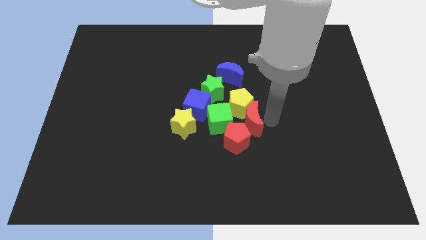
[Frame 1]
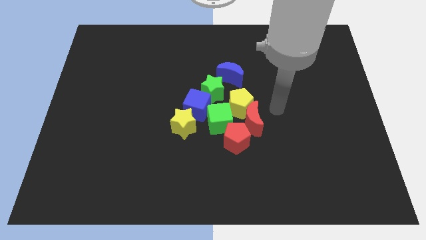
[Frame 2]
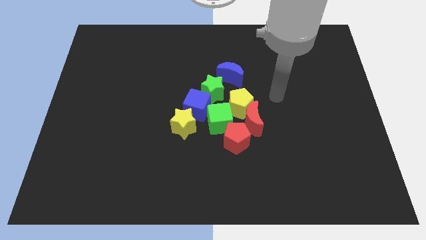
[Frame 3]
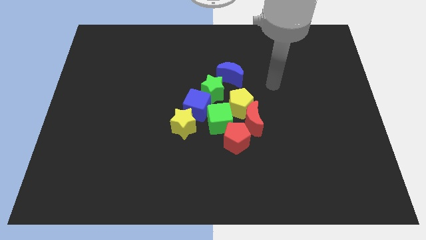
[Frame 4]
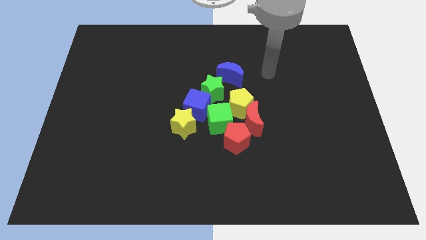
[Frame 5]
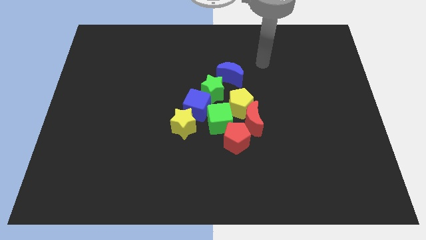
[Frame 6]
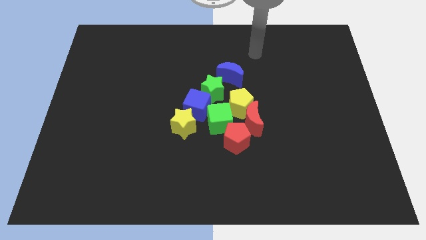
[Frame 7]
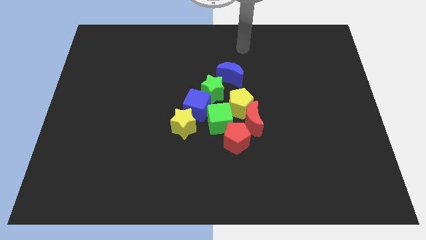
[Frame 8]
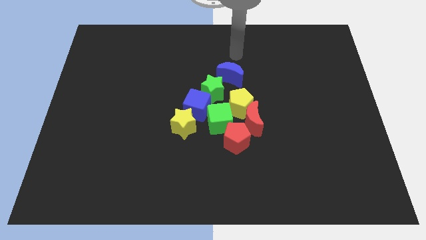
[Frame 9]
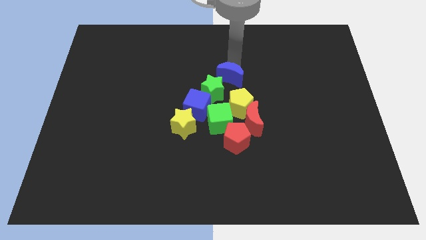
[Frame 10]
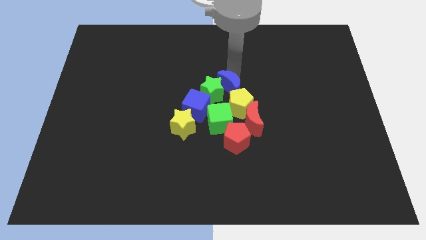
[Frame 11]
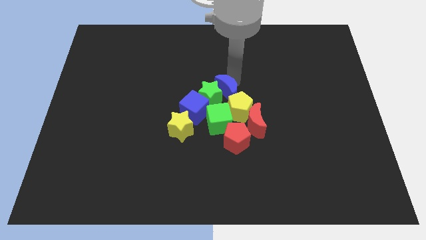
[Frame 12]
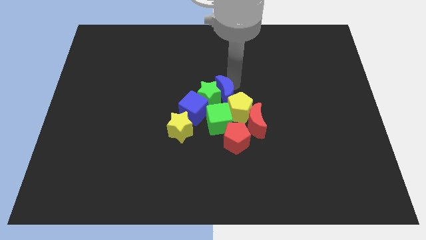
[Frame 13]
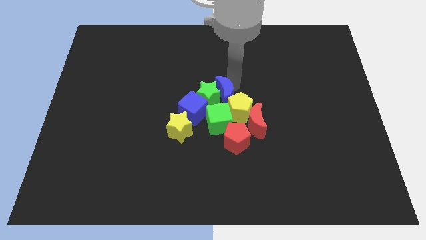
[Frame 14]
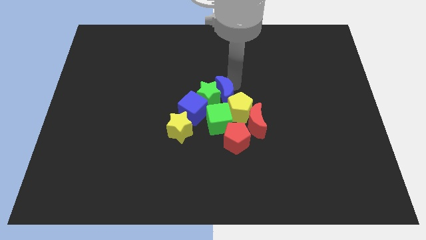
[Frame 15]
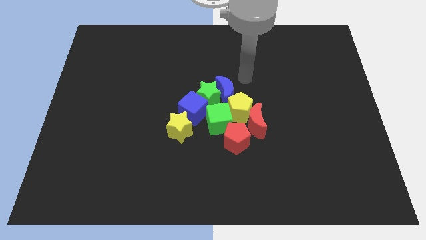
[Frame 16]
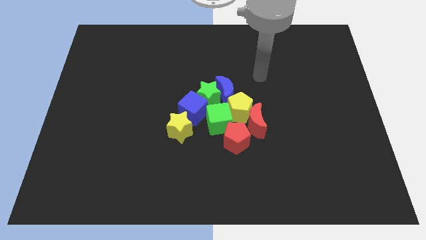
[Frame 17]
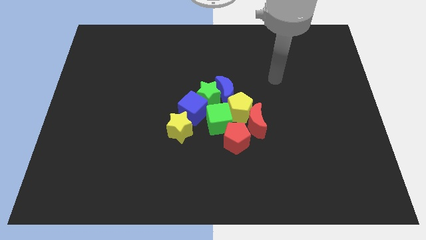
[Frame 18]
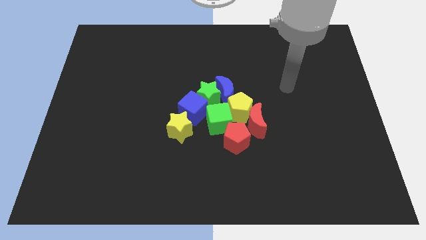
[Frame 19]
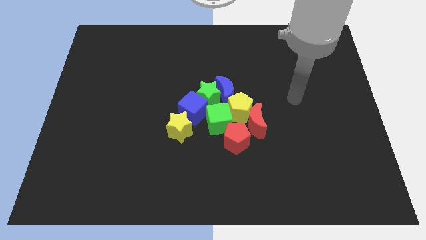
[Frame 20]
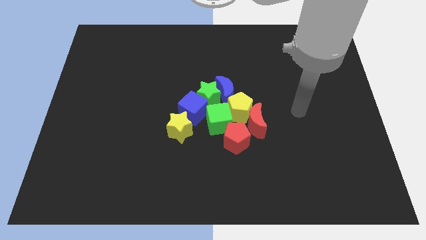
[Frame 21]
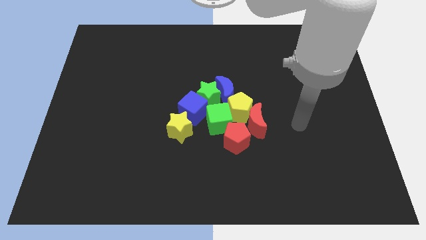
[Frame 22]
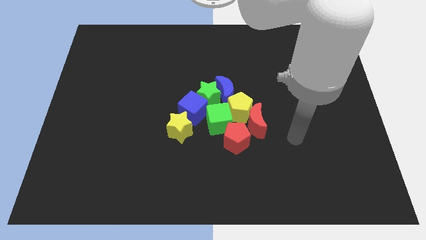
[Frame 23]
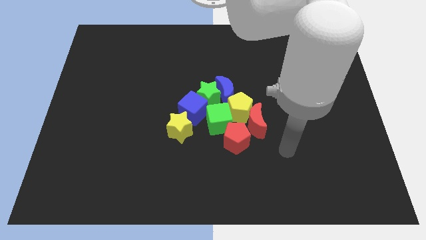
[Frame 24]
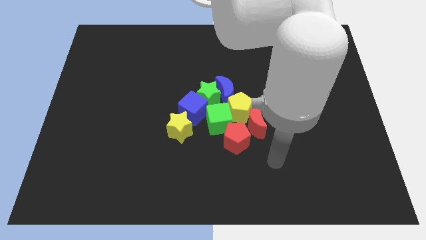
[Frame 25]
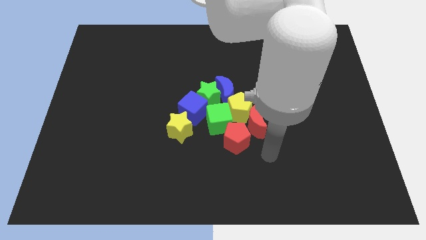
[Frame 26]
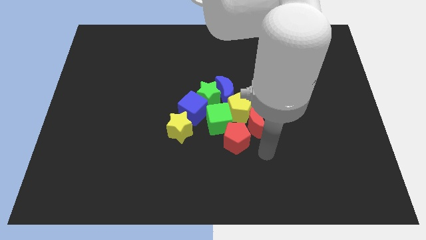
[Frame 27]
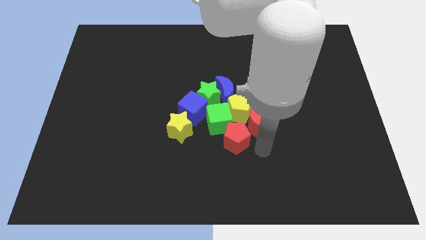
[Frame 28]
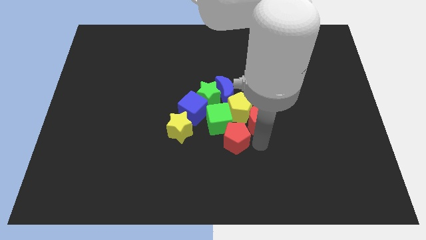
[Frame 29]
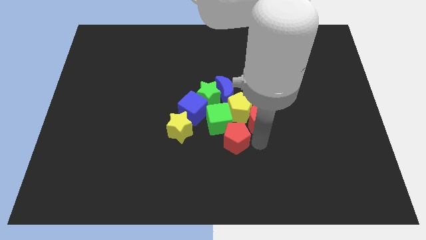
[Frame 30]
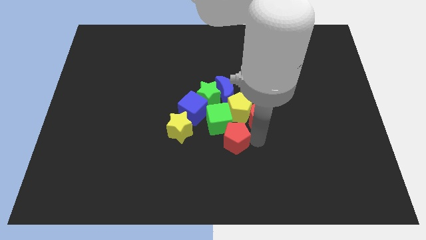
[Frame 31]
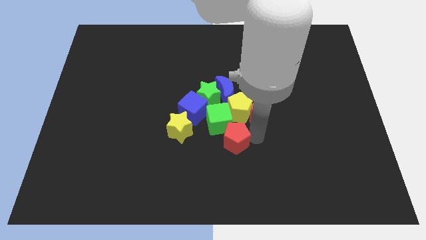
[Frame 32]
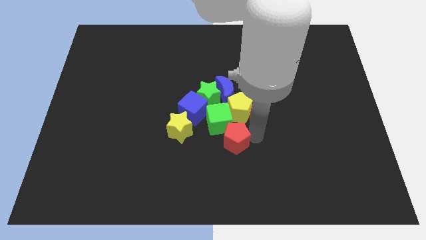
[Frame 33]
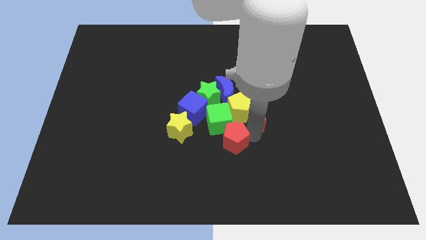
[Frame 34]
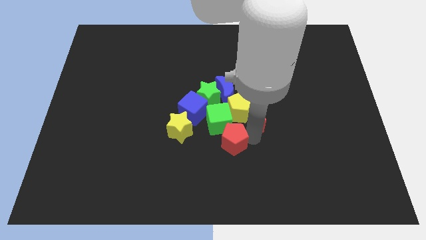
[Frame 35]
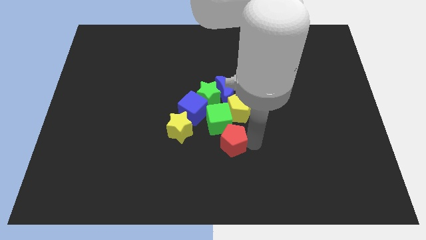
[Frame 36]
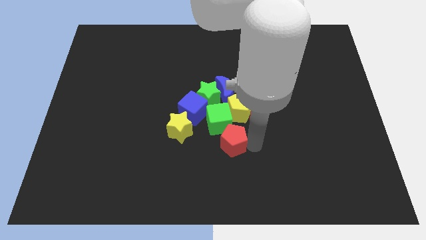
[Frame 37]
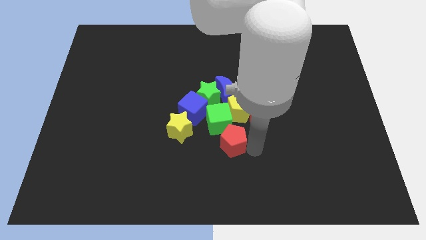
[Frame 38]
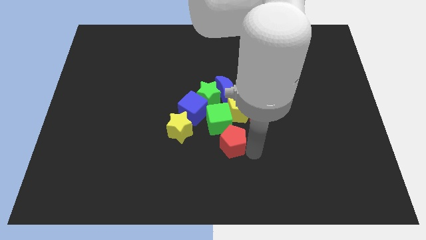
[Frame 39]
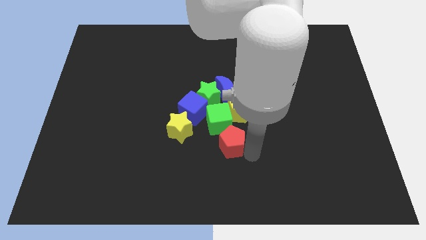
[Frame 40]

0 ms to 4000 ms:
adjust the blocks at the center of the board

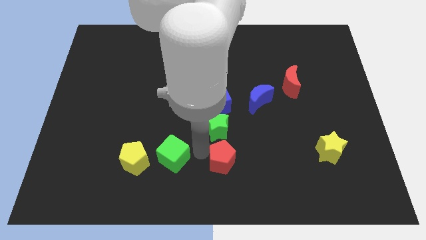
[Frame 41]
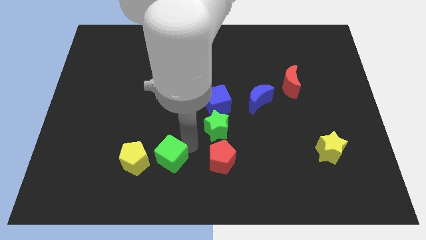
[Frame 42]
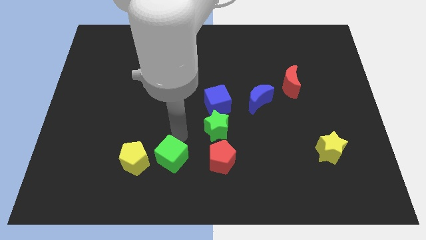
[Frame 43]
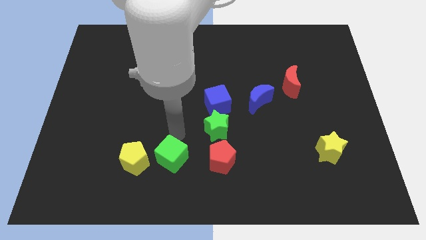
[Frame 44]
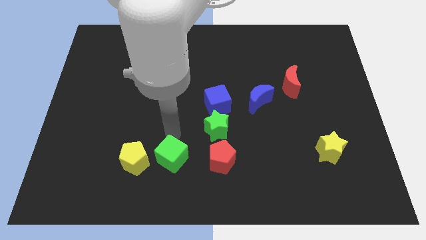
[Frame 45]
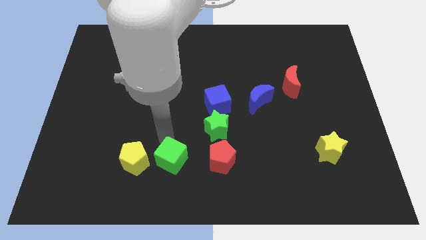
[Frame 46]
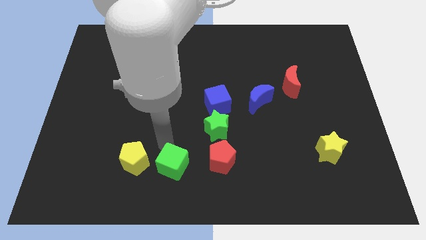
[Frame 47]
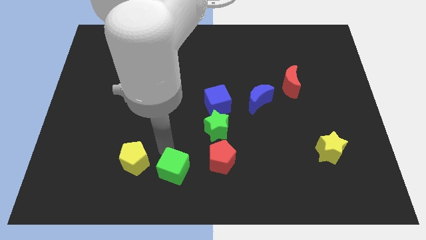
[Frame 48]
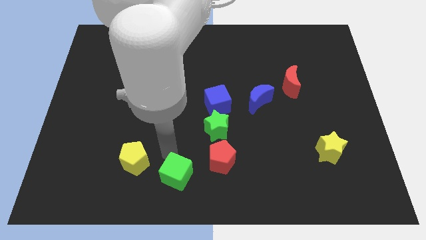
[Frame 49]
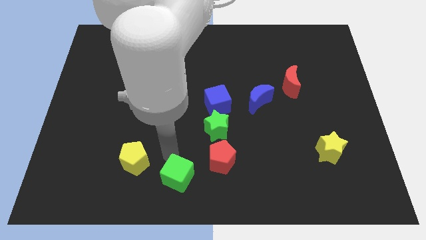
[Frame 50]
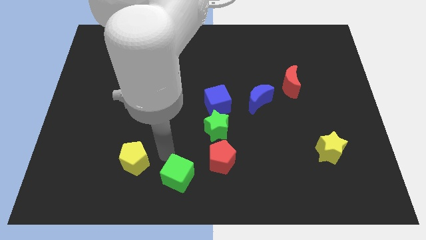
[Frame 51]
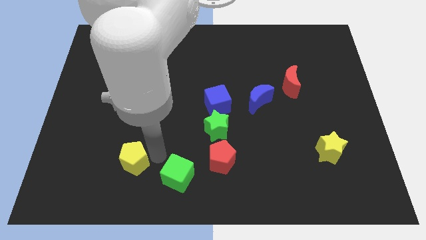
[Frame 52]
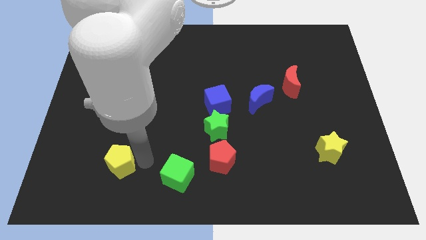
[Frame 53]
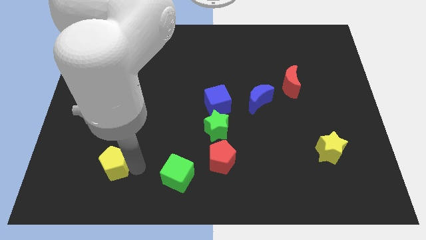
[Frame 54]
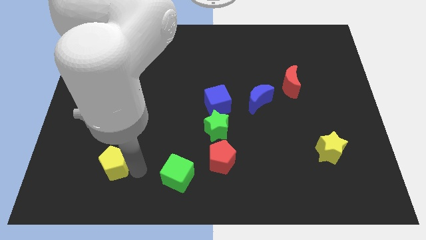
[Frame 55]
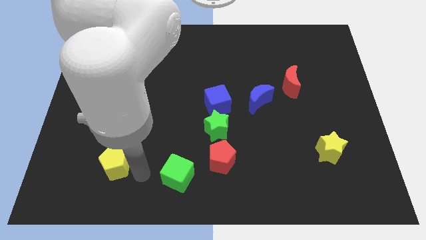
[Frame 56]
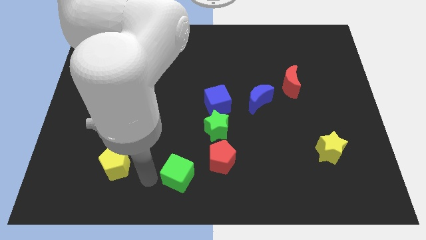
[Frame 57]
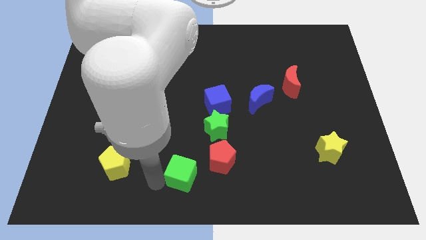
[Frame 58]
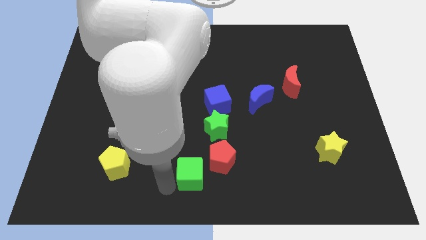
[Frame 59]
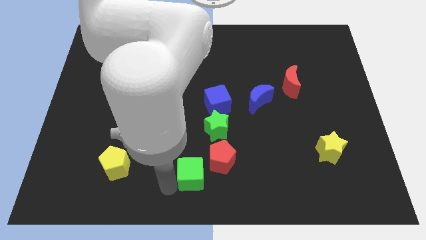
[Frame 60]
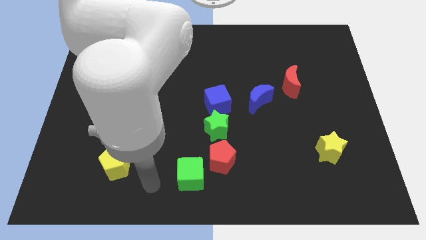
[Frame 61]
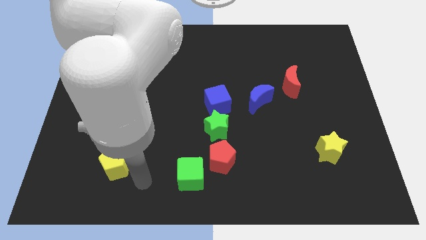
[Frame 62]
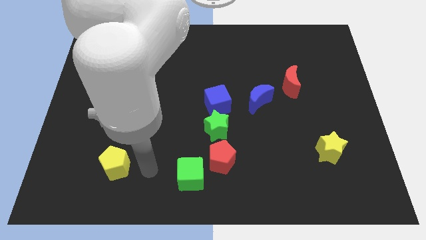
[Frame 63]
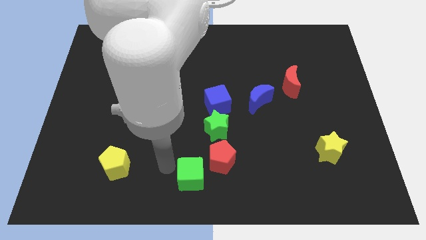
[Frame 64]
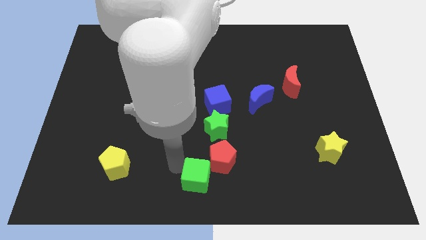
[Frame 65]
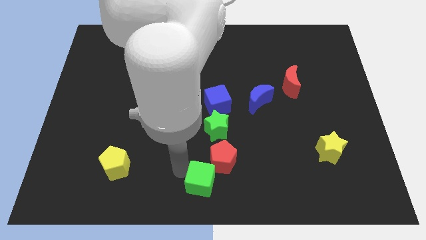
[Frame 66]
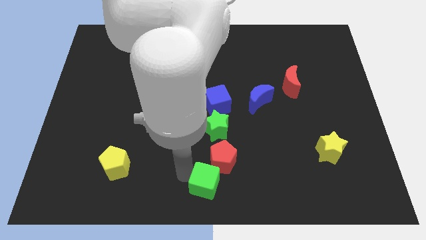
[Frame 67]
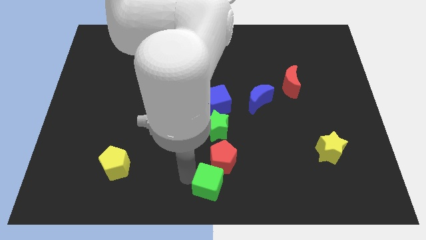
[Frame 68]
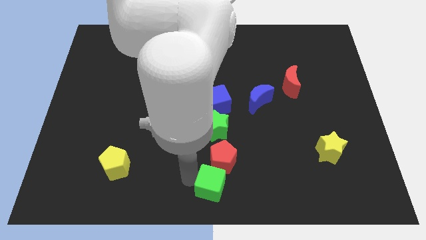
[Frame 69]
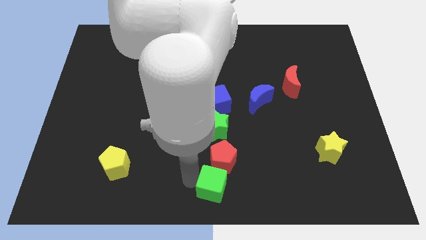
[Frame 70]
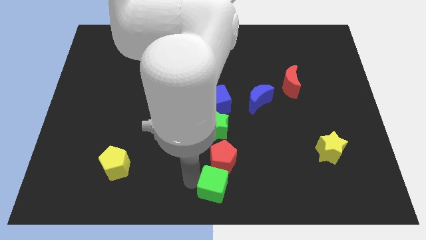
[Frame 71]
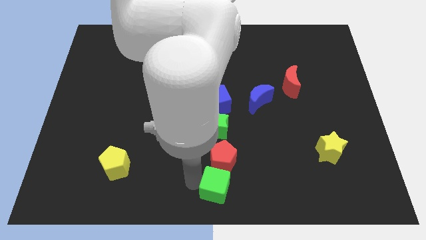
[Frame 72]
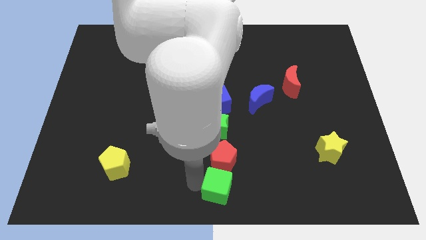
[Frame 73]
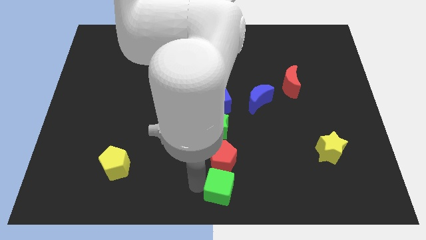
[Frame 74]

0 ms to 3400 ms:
place green cube to the bottom of the red pentagon

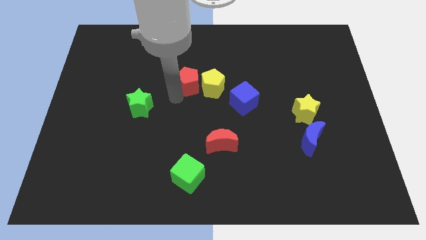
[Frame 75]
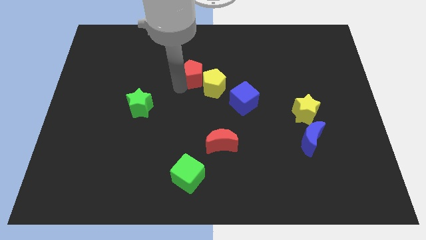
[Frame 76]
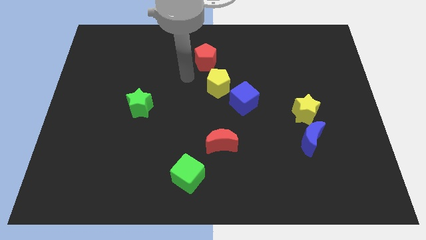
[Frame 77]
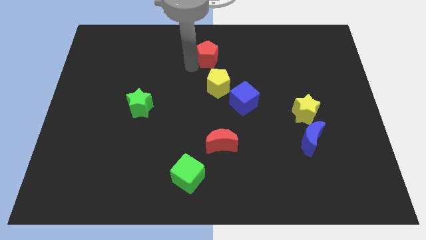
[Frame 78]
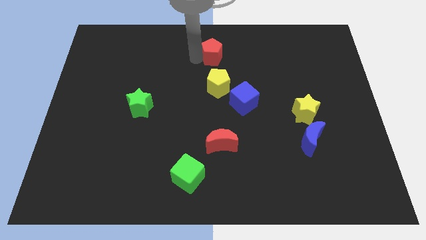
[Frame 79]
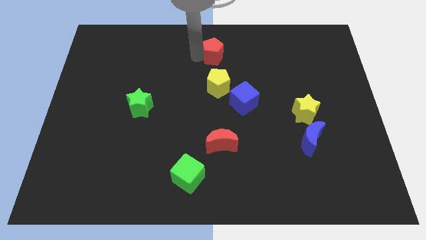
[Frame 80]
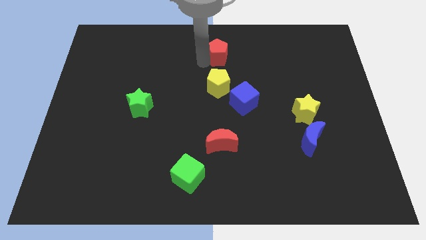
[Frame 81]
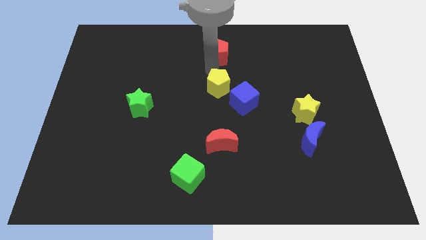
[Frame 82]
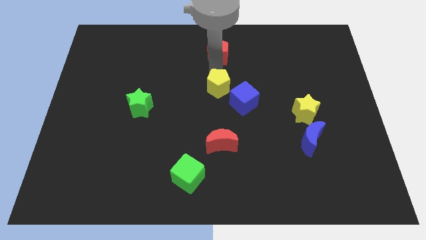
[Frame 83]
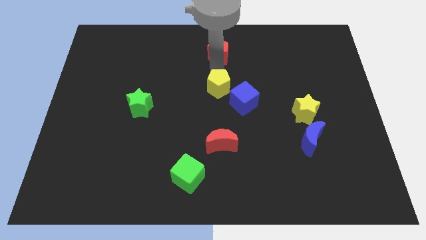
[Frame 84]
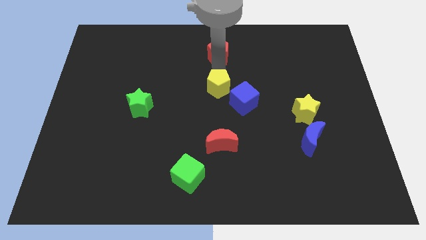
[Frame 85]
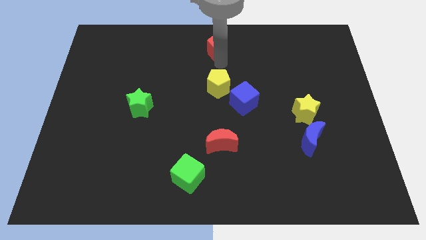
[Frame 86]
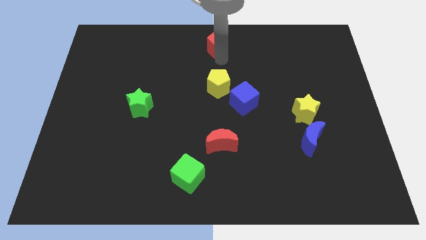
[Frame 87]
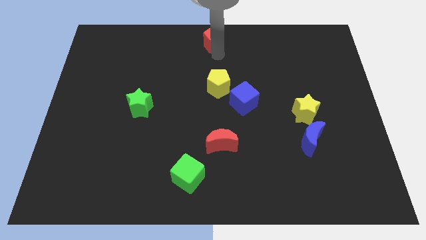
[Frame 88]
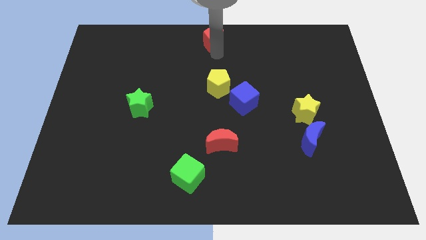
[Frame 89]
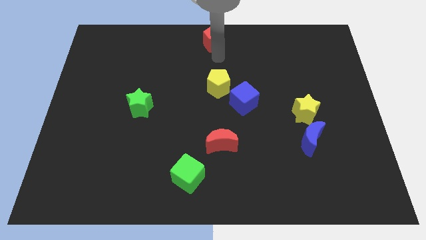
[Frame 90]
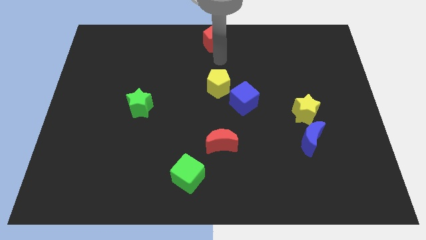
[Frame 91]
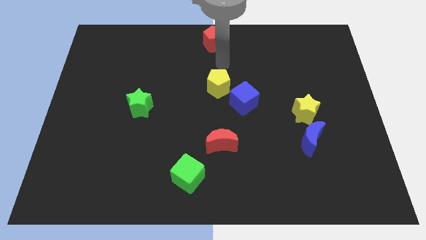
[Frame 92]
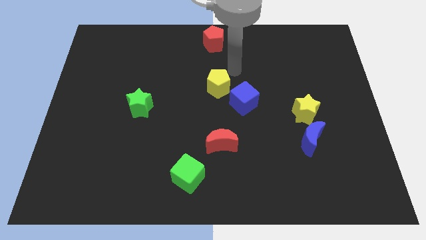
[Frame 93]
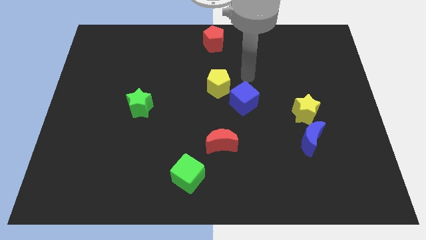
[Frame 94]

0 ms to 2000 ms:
put the red pentagon to the top side center
